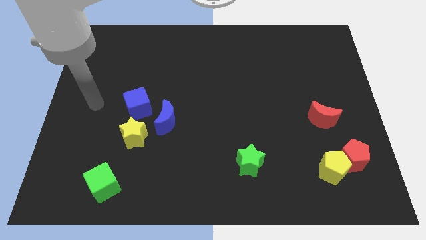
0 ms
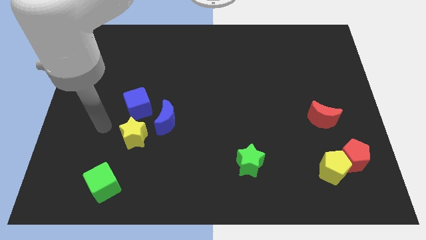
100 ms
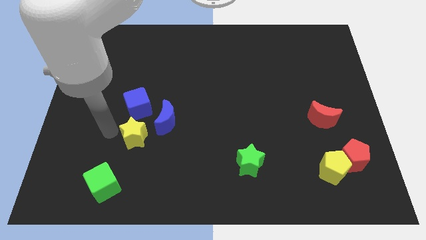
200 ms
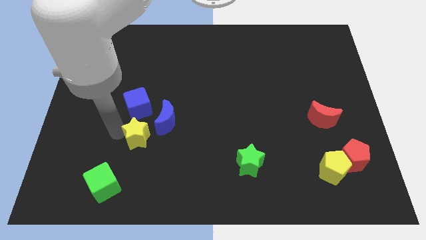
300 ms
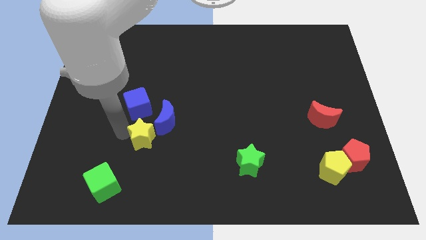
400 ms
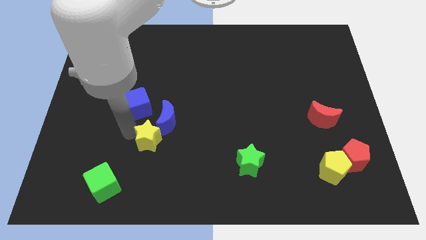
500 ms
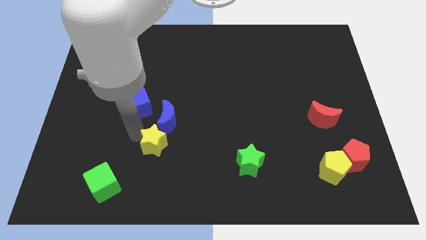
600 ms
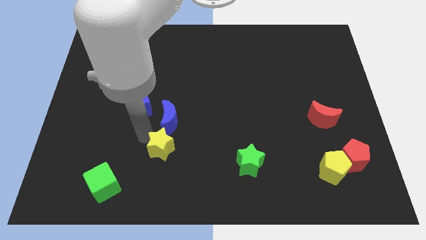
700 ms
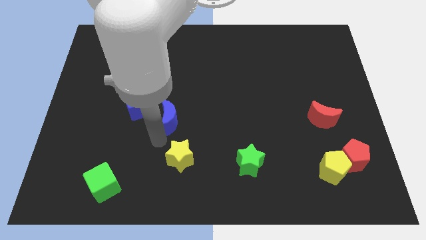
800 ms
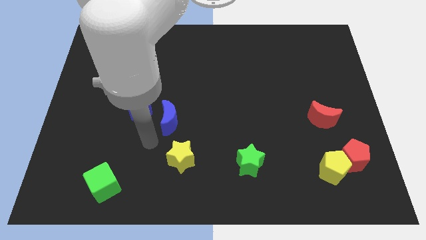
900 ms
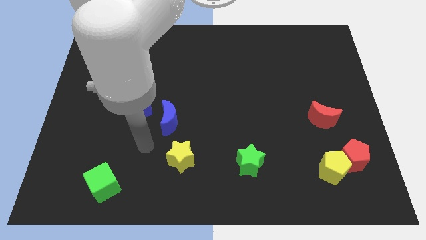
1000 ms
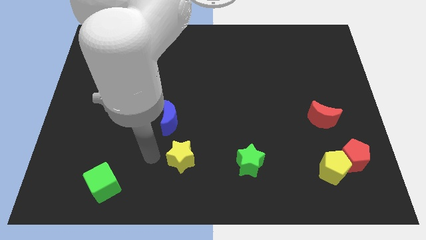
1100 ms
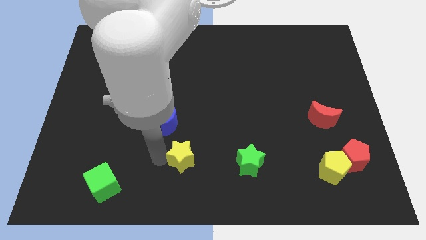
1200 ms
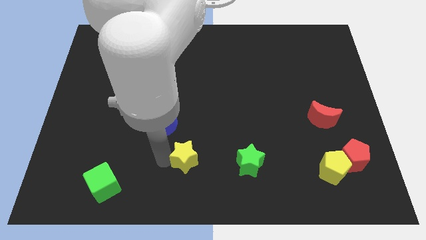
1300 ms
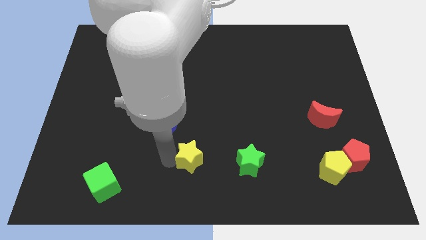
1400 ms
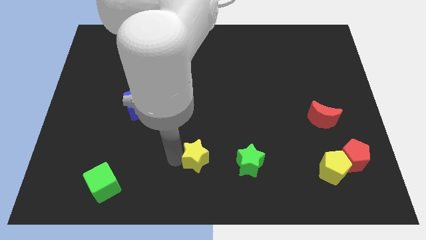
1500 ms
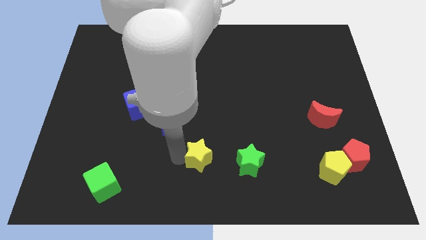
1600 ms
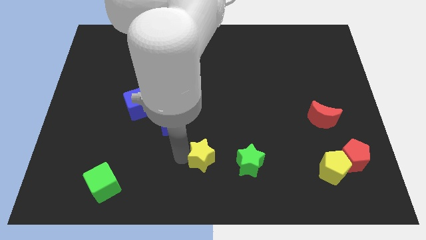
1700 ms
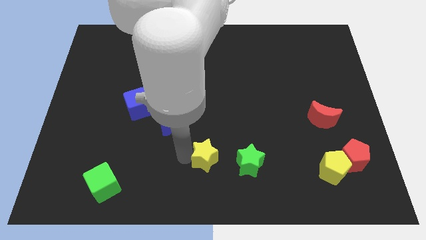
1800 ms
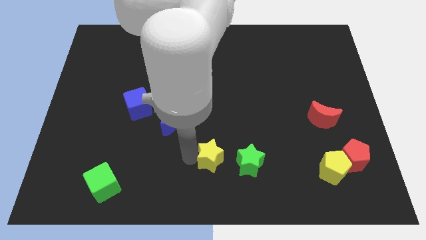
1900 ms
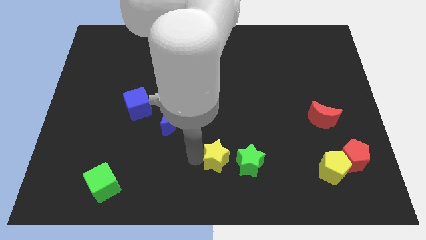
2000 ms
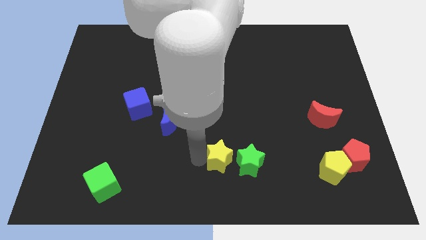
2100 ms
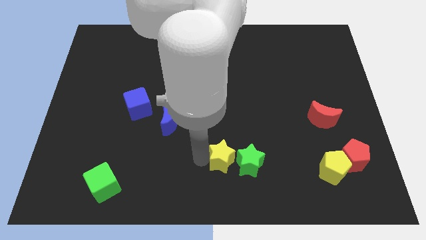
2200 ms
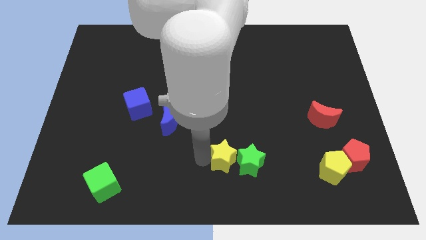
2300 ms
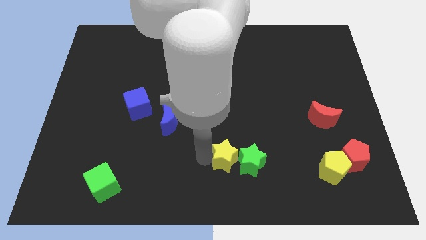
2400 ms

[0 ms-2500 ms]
slide the yellow star towards the green star

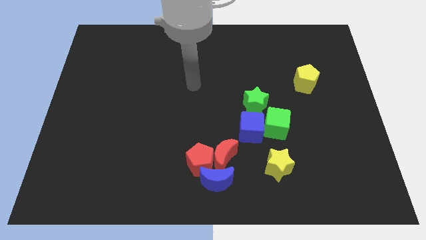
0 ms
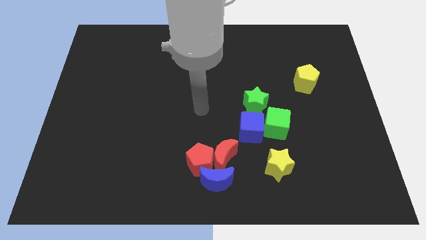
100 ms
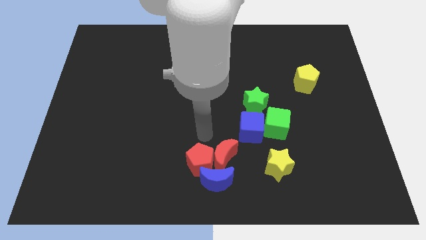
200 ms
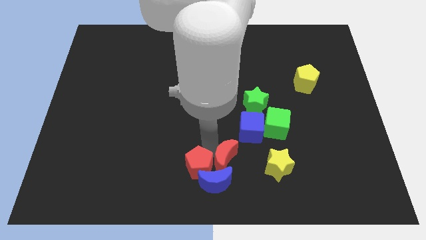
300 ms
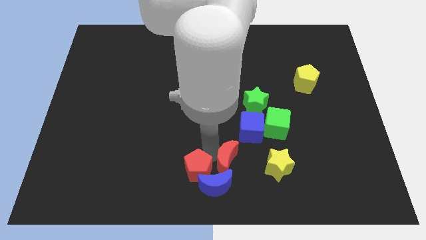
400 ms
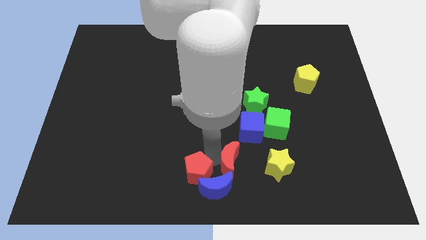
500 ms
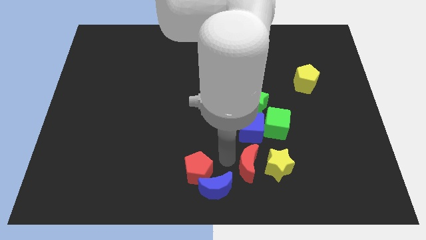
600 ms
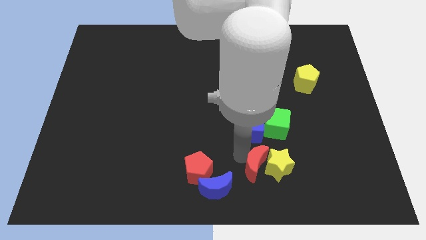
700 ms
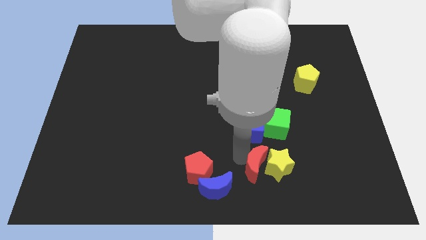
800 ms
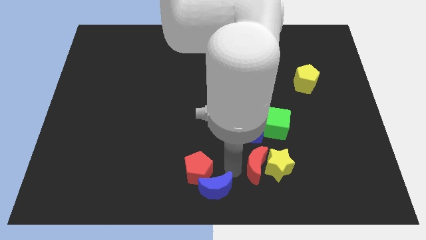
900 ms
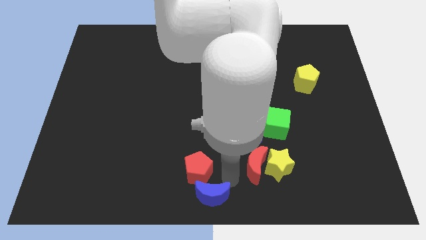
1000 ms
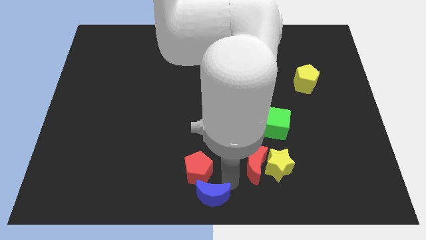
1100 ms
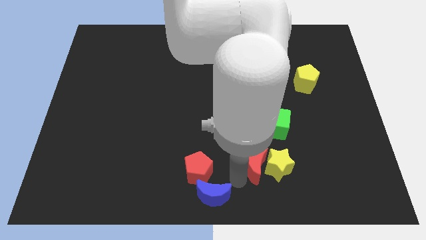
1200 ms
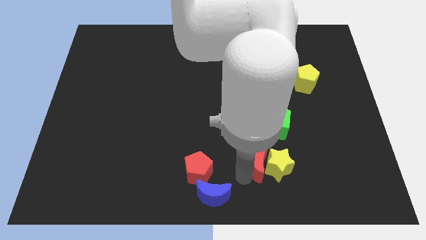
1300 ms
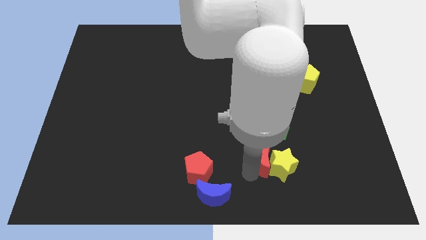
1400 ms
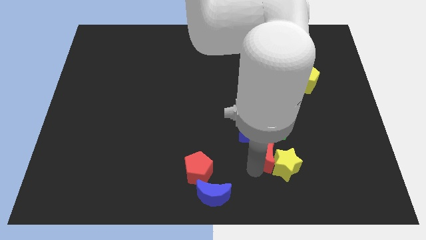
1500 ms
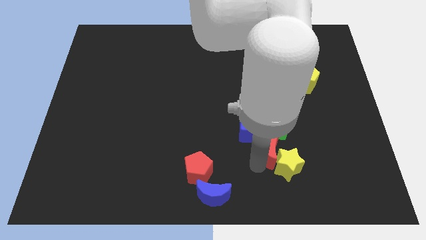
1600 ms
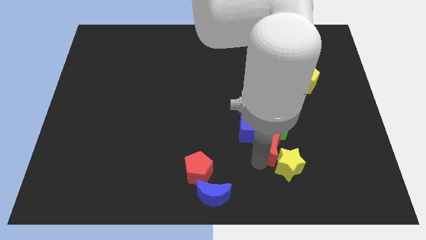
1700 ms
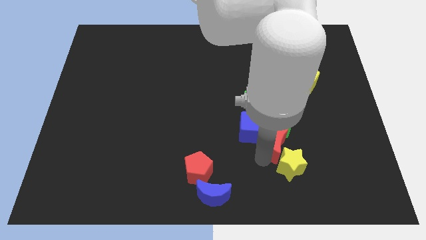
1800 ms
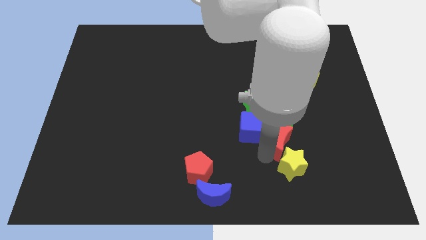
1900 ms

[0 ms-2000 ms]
slide the red moon to the green cube

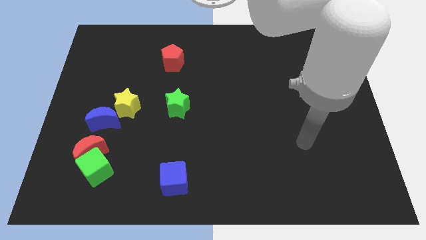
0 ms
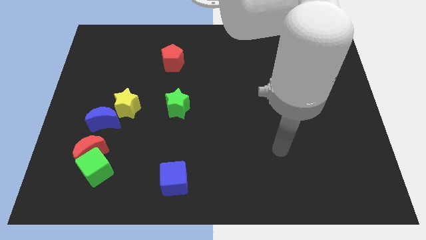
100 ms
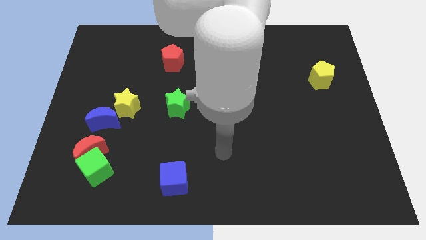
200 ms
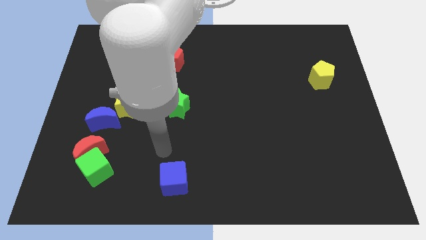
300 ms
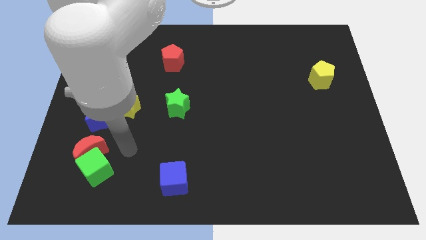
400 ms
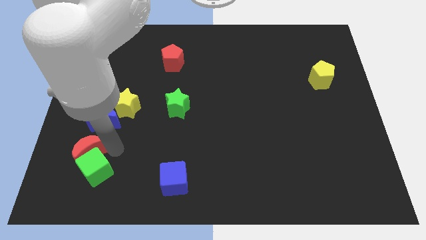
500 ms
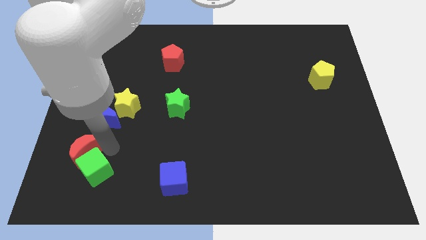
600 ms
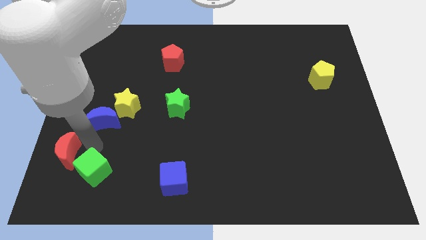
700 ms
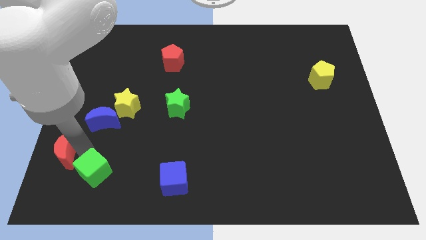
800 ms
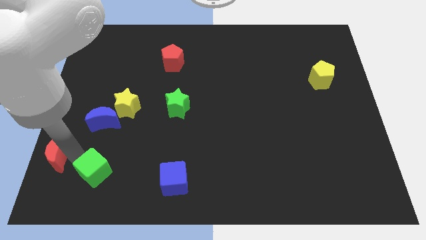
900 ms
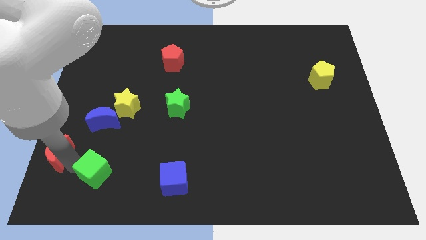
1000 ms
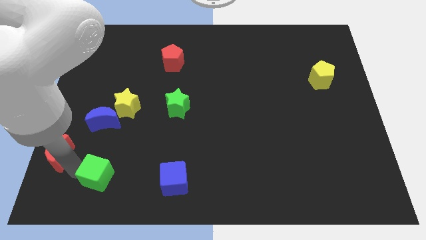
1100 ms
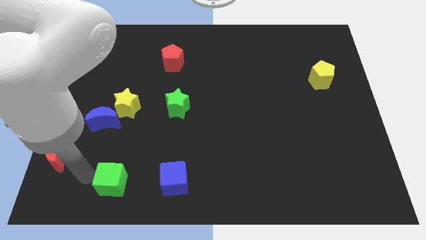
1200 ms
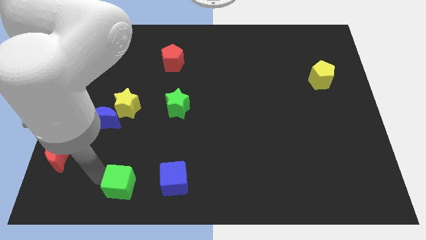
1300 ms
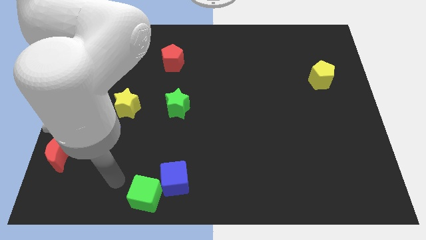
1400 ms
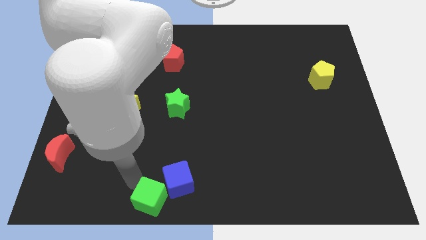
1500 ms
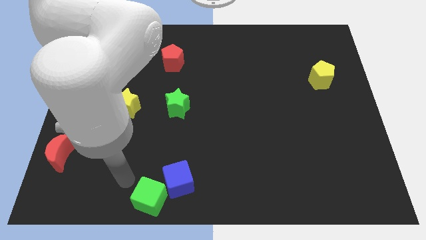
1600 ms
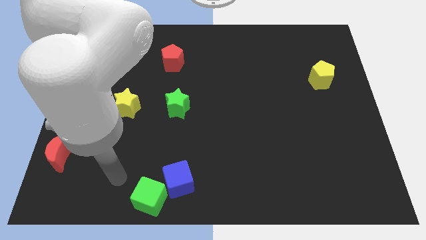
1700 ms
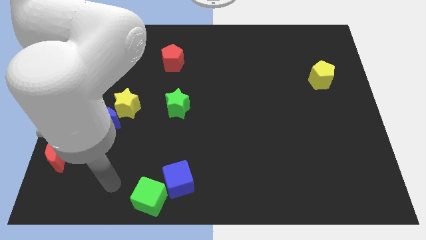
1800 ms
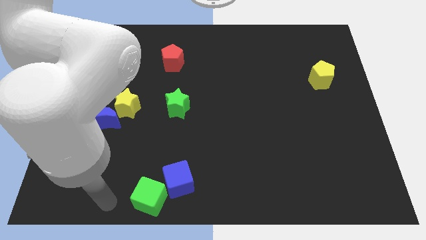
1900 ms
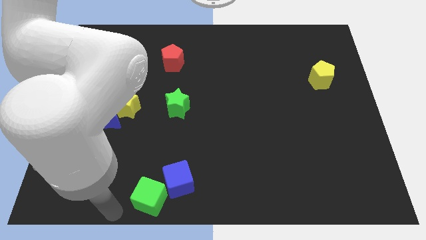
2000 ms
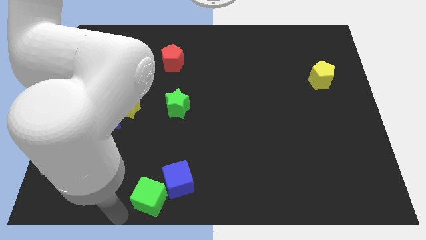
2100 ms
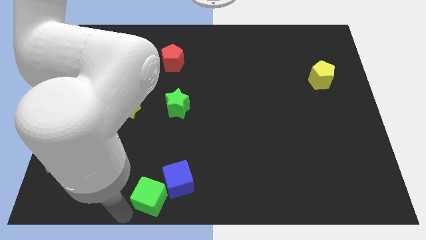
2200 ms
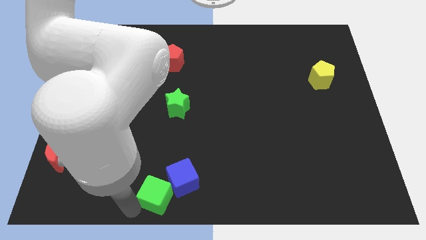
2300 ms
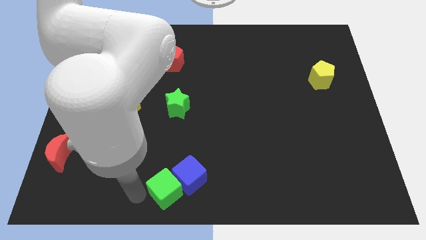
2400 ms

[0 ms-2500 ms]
move the green cube to the blue cube

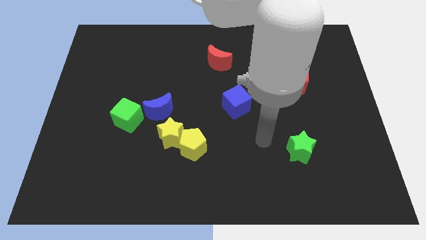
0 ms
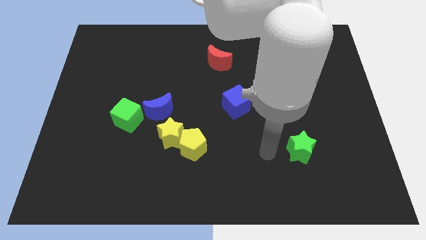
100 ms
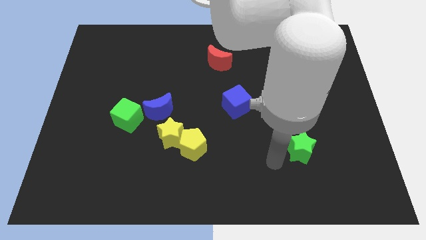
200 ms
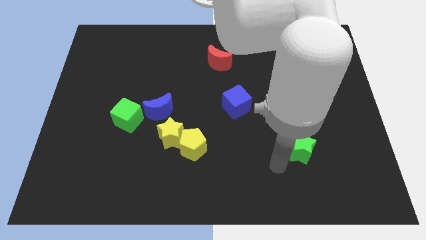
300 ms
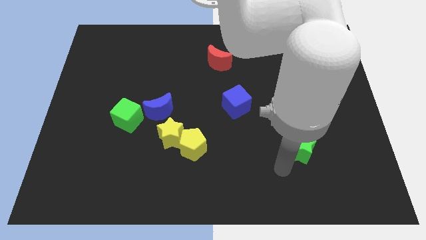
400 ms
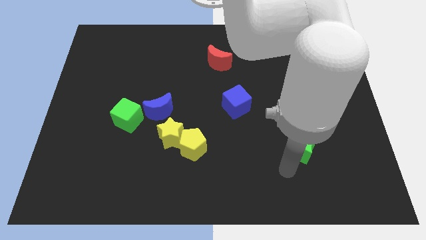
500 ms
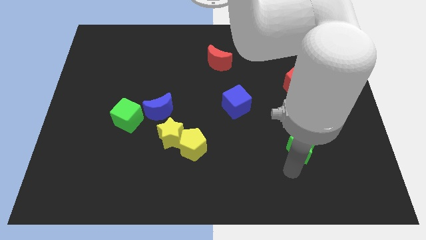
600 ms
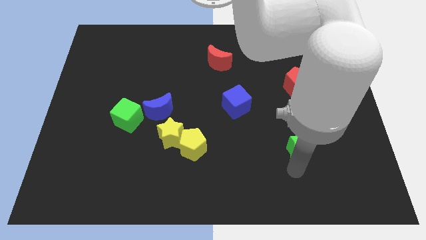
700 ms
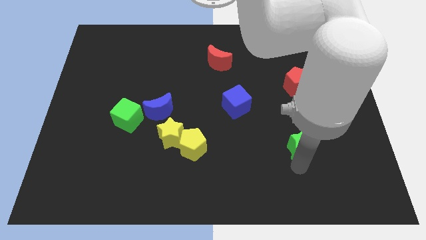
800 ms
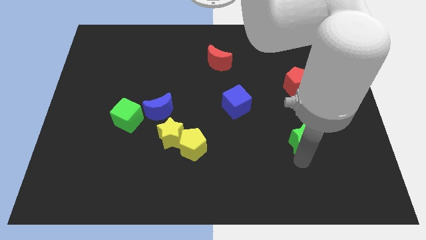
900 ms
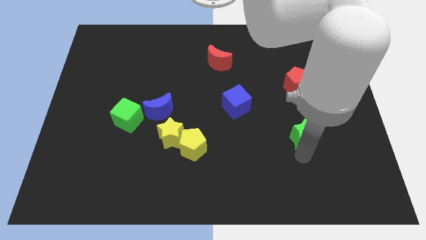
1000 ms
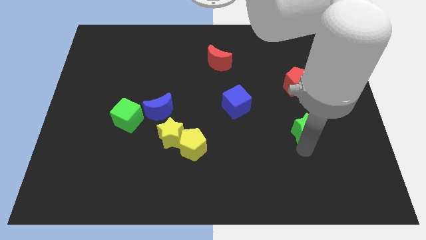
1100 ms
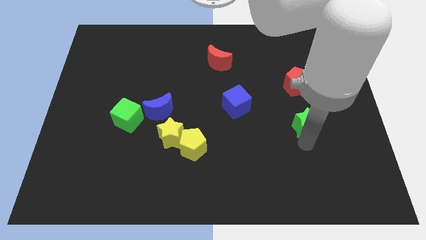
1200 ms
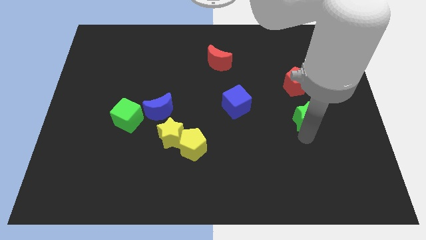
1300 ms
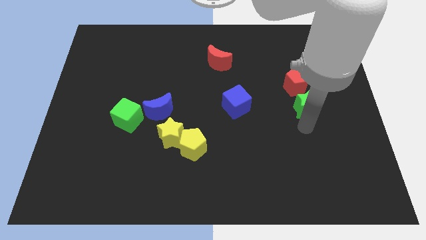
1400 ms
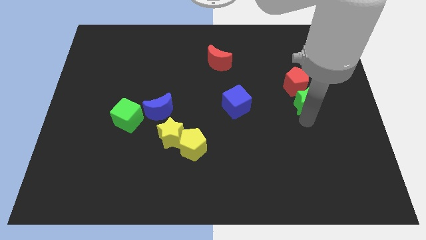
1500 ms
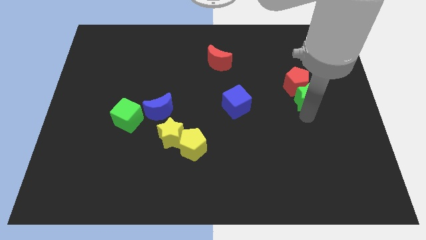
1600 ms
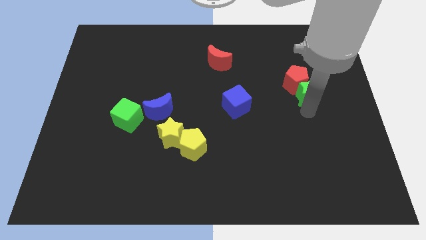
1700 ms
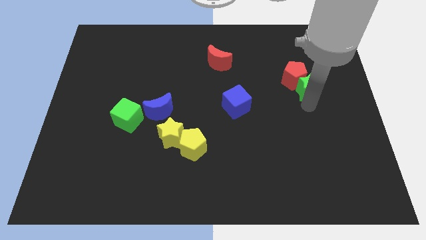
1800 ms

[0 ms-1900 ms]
slide the green star towards the red pentagon
